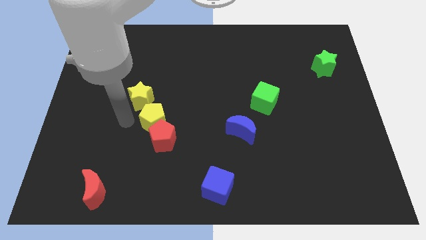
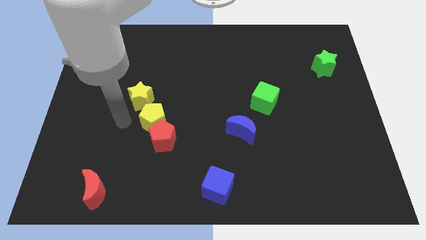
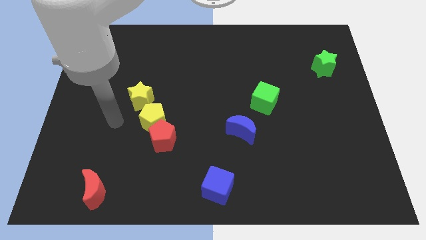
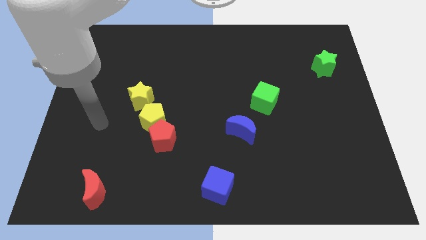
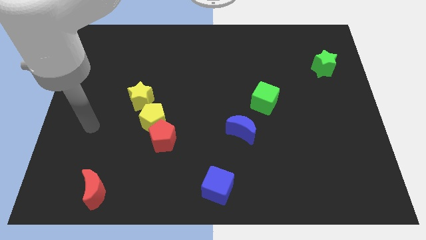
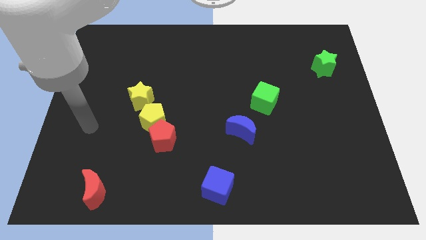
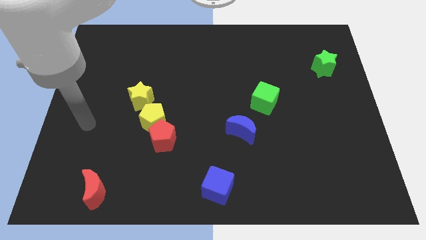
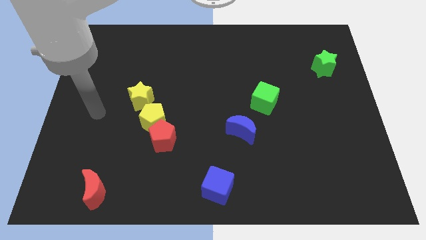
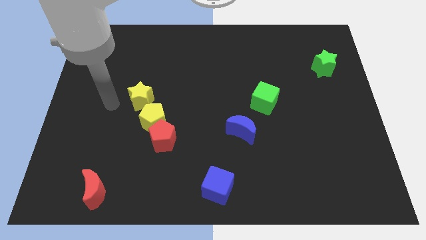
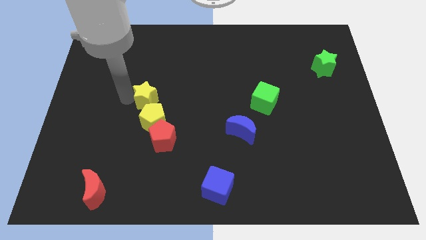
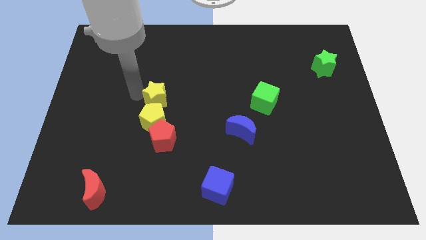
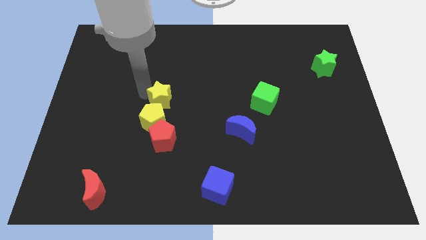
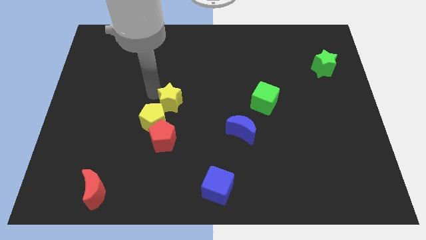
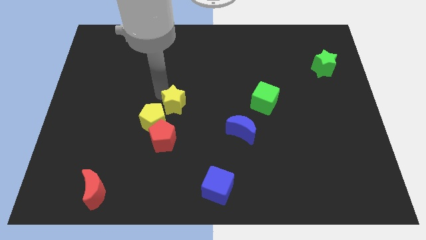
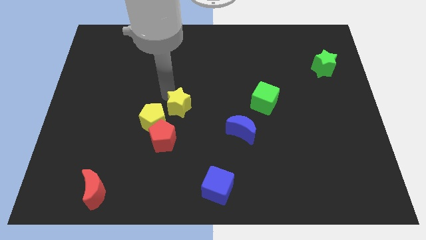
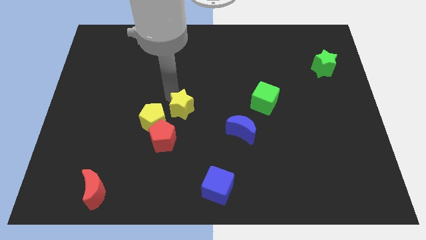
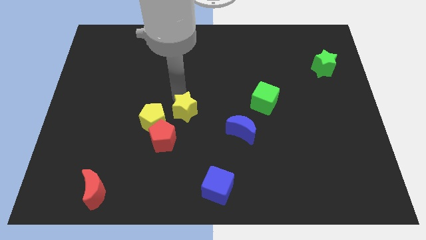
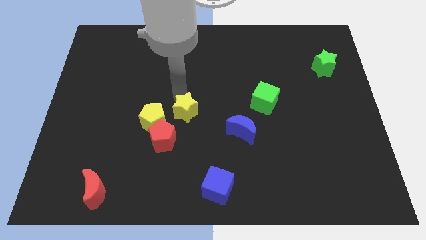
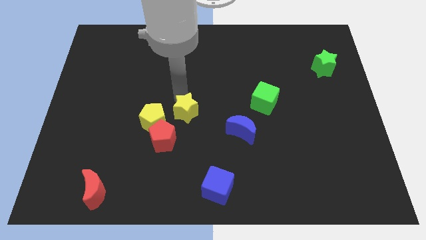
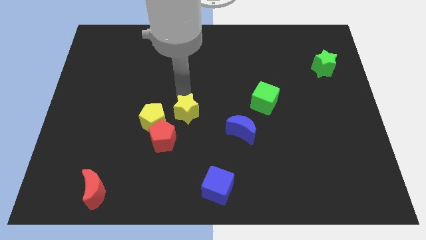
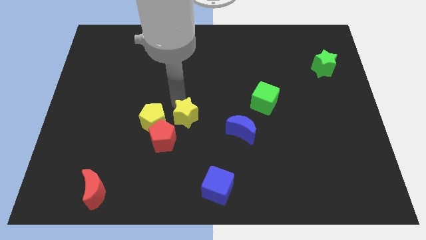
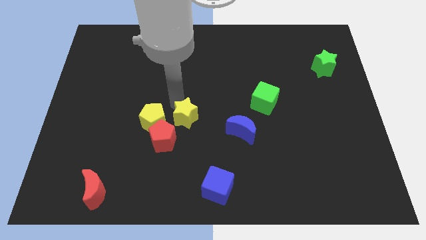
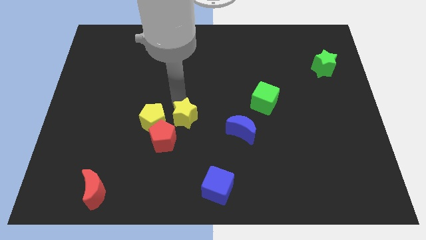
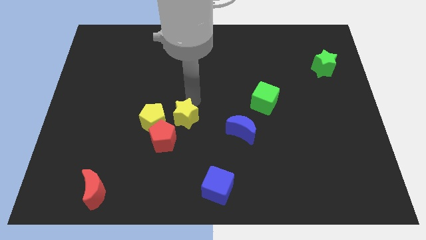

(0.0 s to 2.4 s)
place the yellow star right to the yellow pentagon

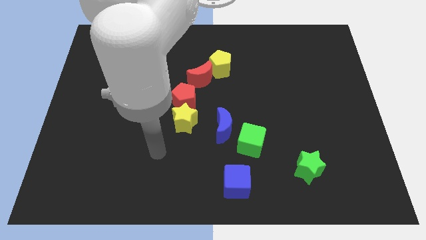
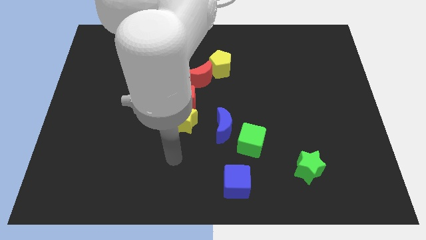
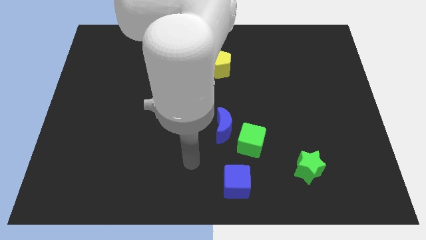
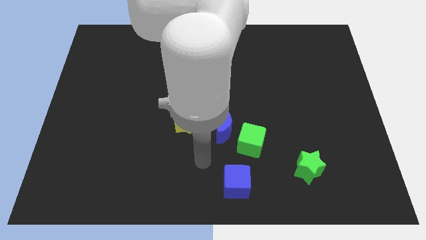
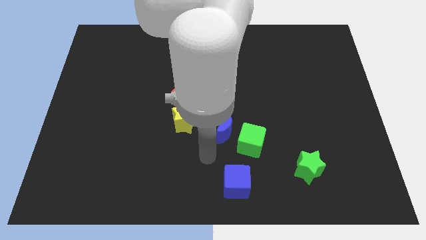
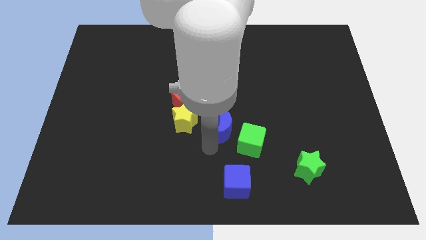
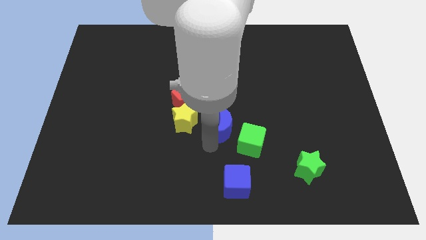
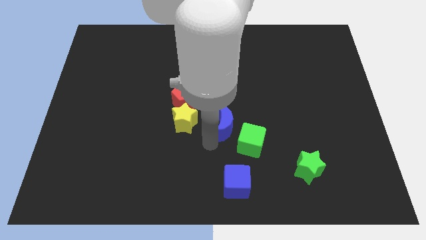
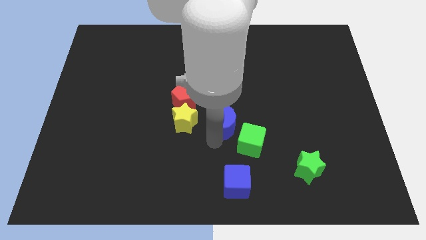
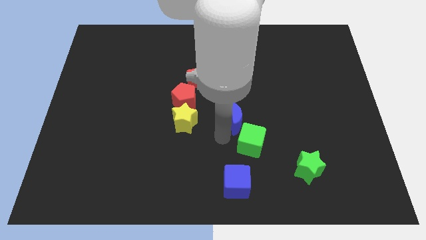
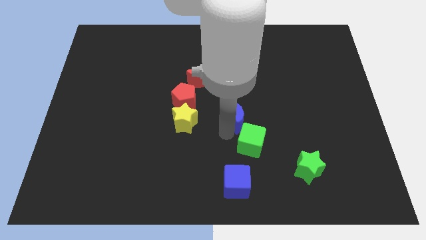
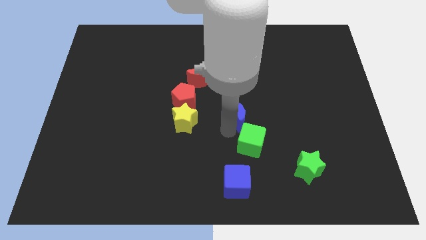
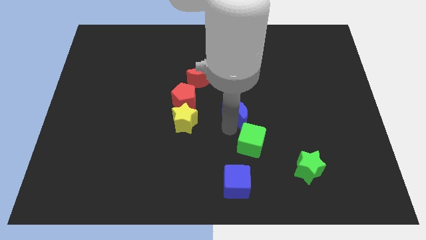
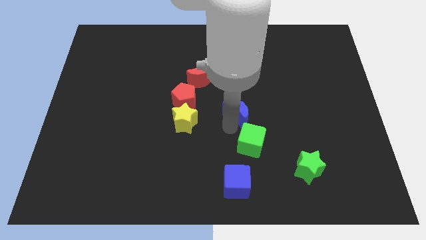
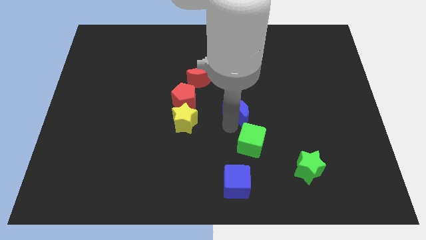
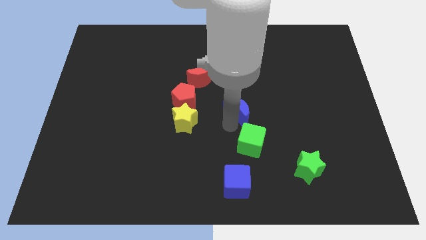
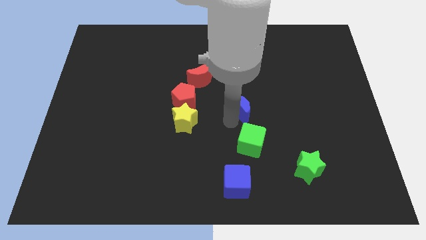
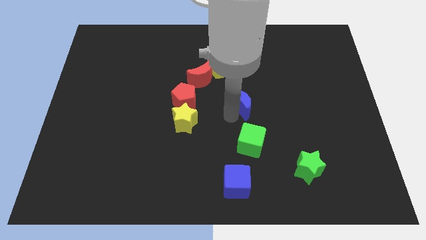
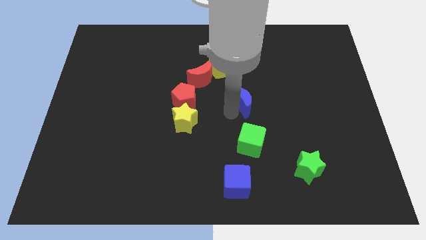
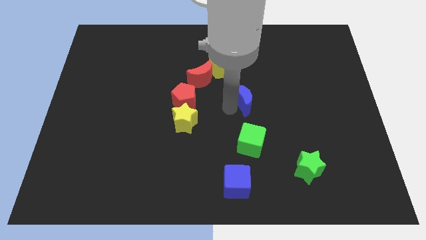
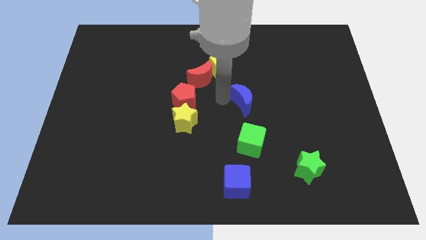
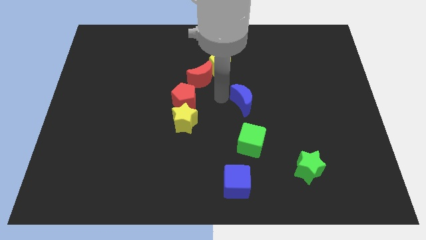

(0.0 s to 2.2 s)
put the blue crescent above the green cube

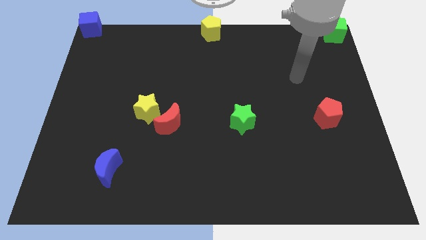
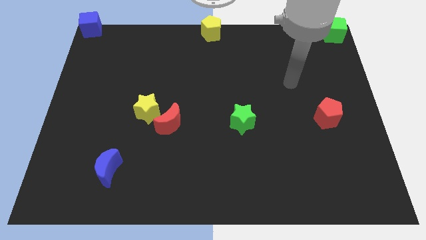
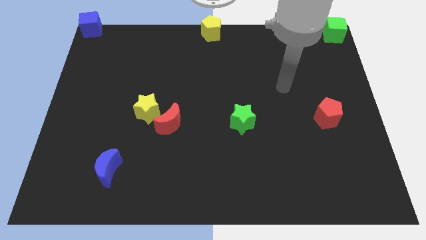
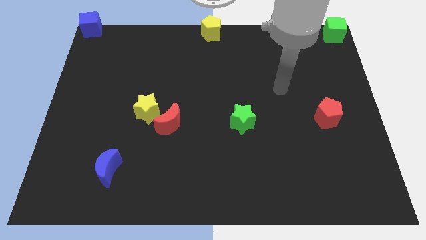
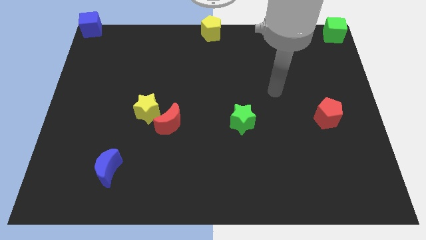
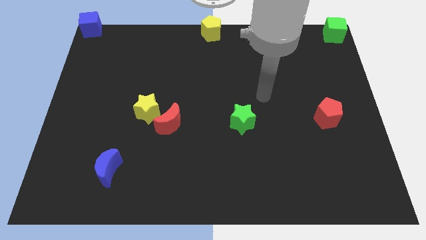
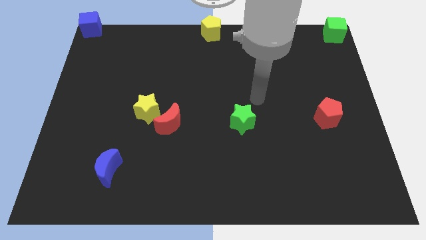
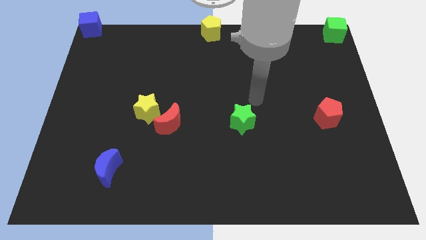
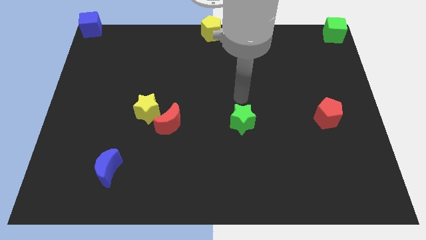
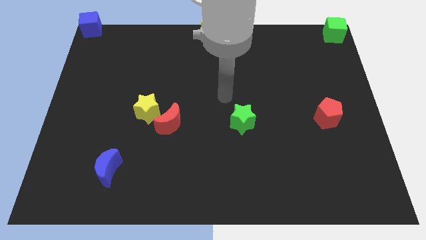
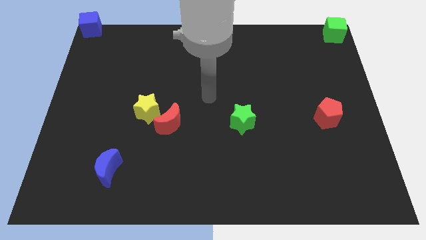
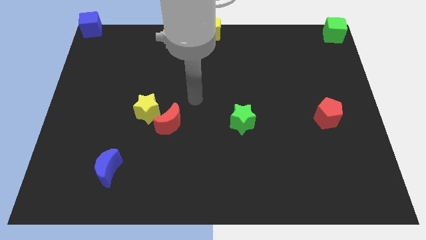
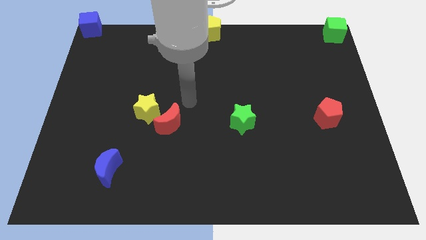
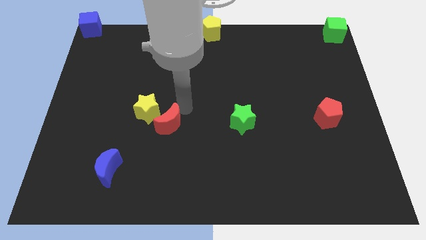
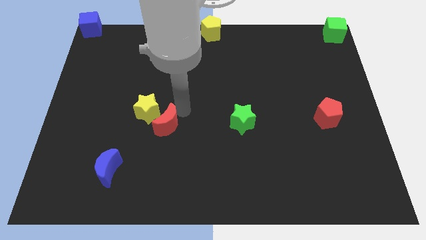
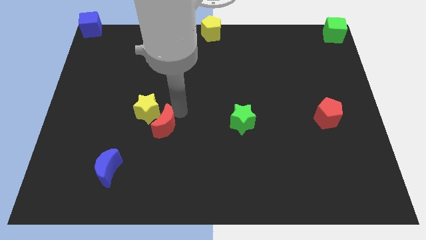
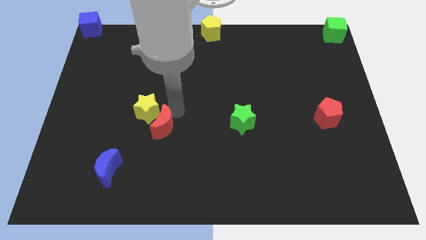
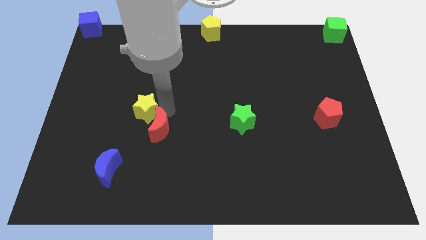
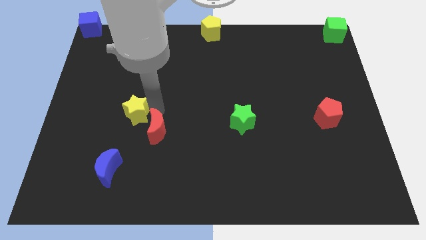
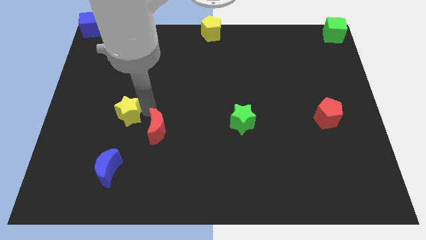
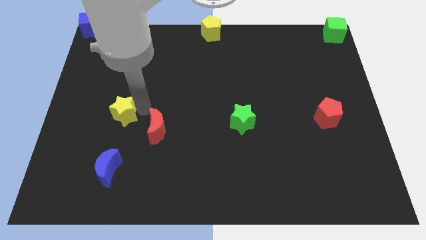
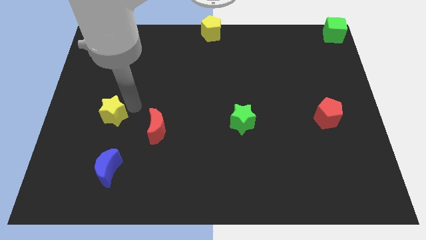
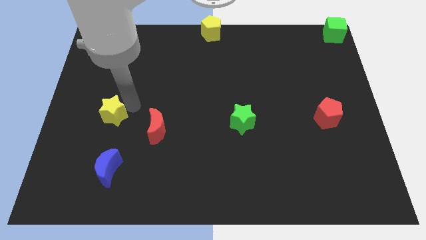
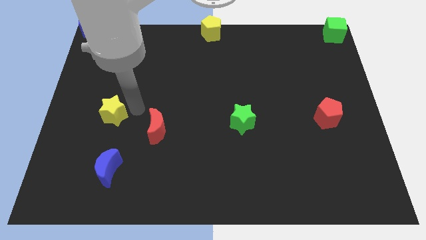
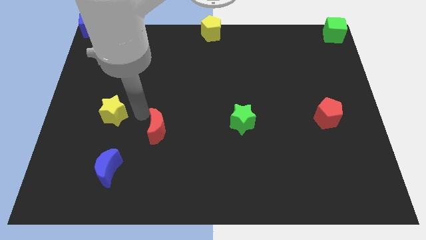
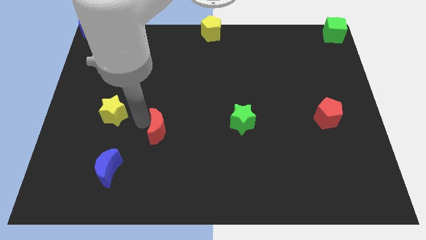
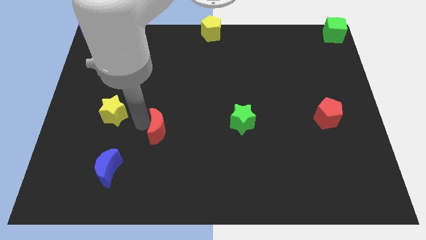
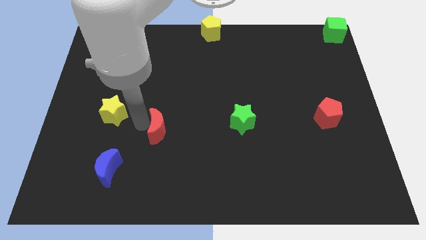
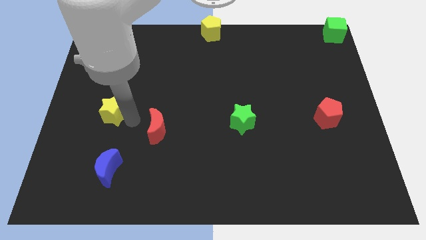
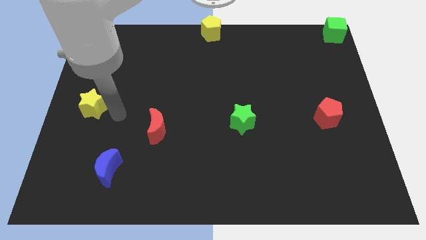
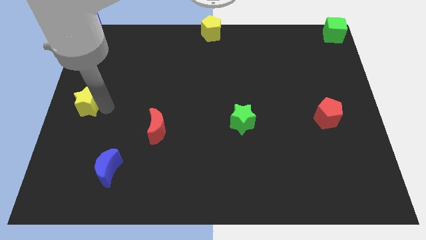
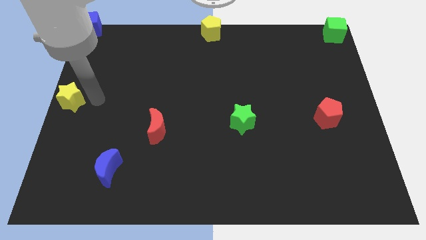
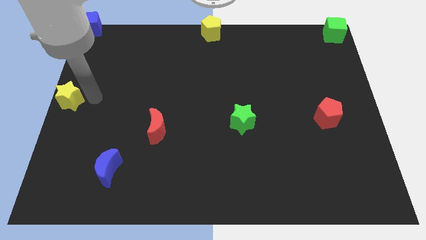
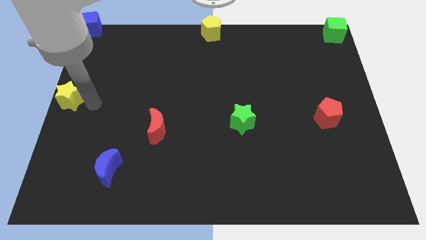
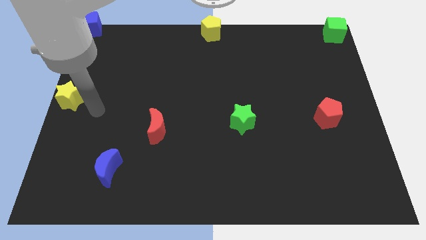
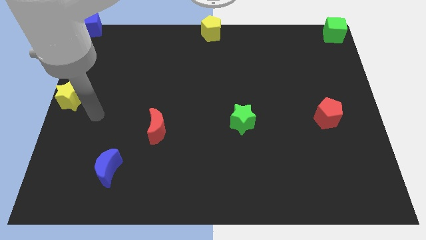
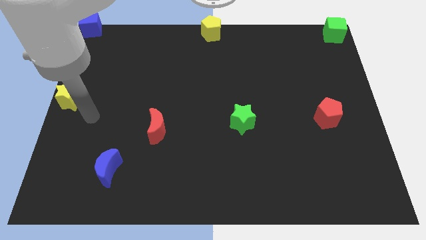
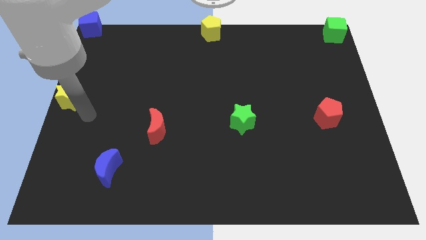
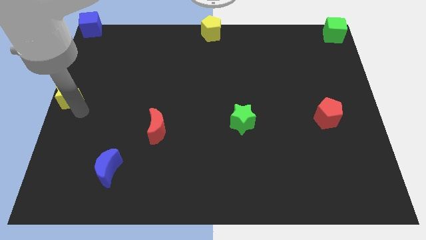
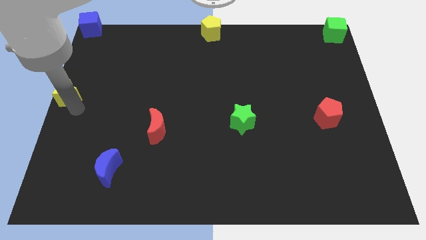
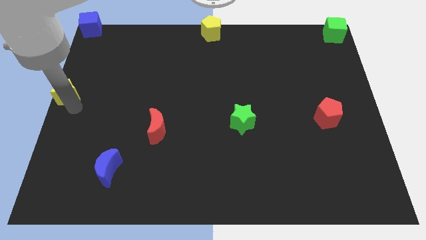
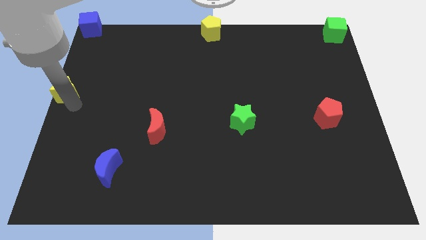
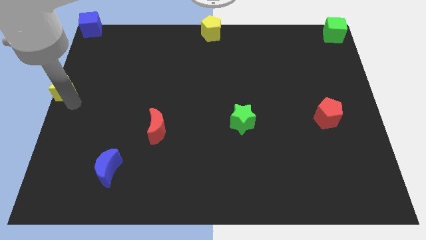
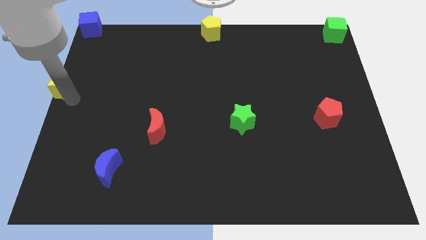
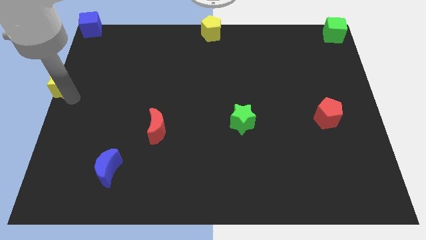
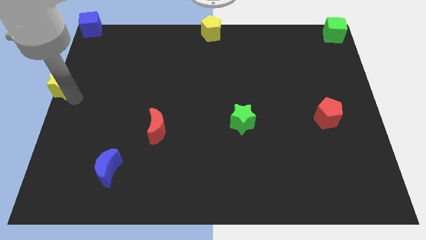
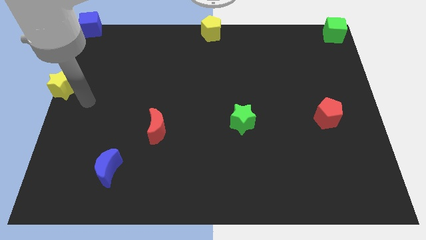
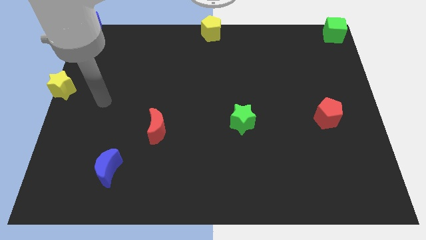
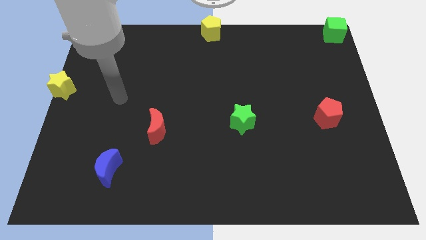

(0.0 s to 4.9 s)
slide the yellow star to the center left side of the board
